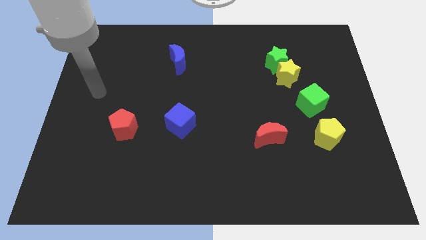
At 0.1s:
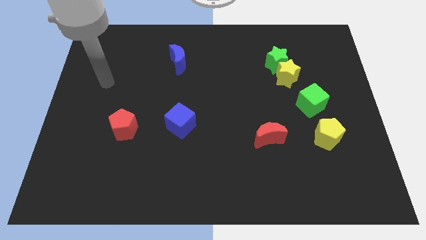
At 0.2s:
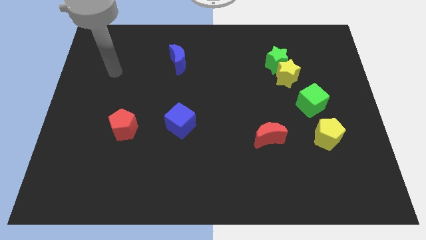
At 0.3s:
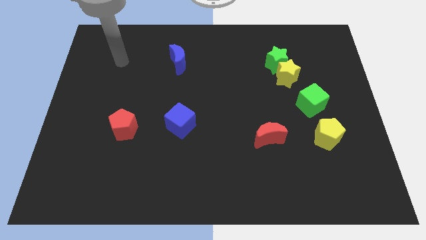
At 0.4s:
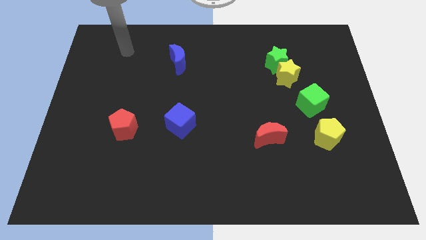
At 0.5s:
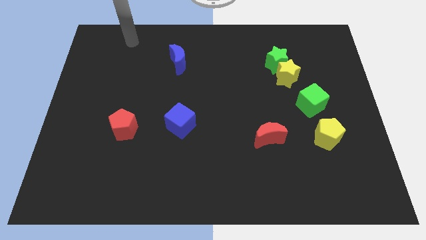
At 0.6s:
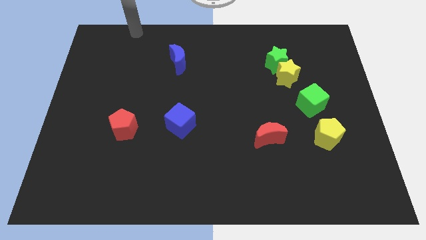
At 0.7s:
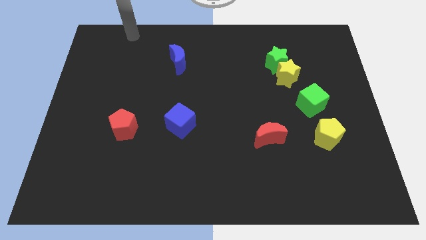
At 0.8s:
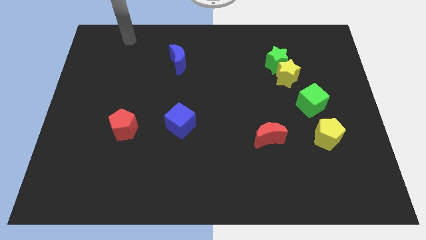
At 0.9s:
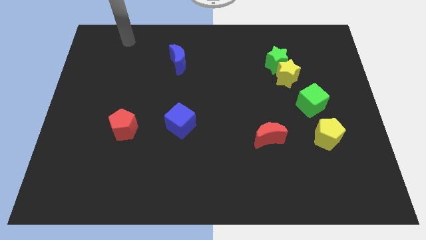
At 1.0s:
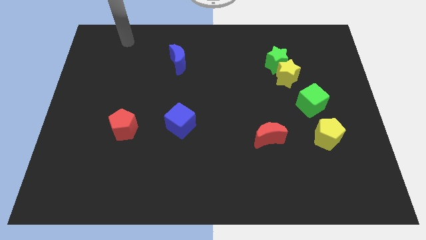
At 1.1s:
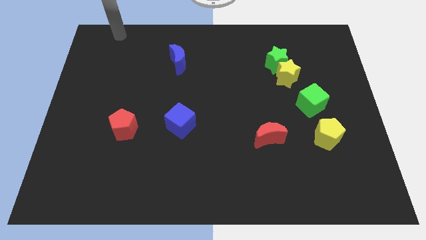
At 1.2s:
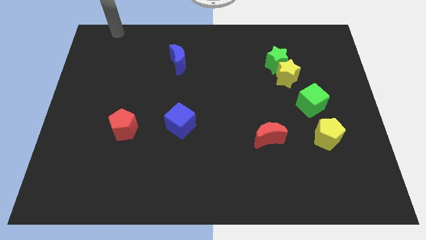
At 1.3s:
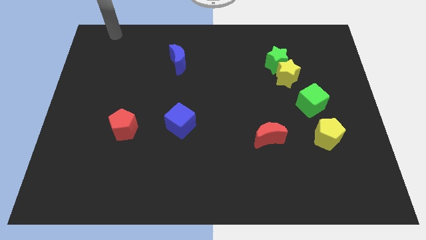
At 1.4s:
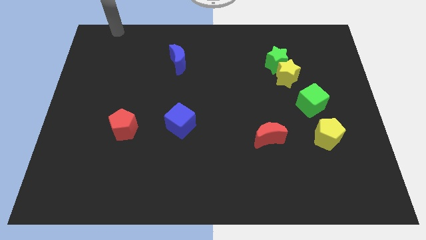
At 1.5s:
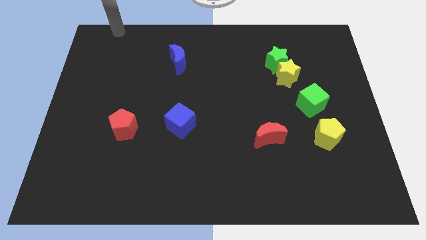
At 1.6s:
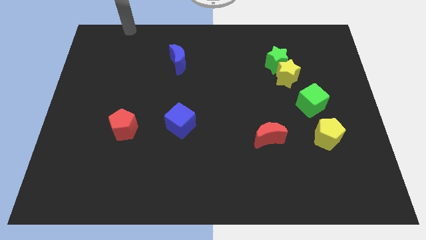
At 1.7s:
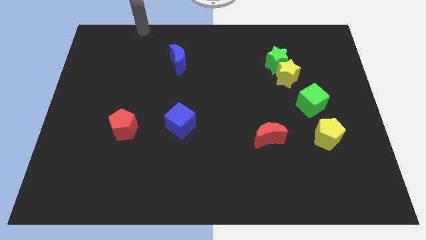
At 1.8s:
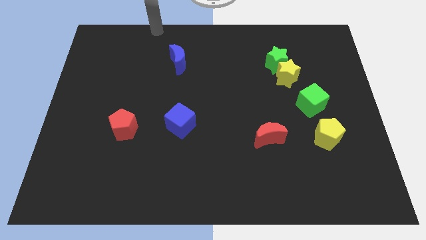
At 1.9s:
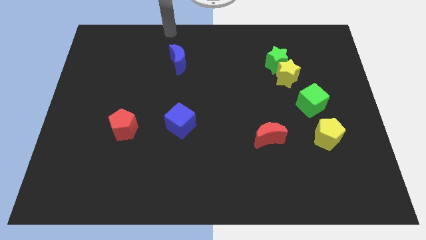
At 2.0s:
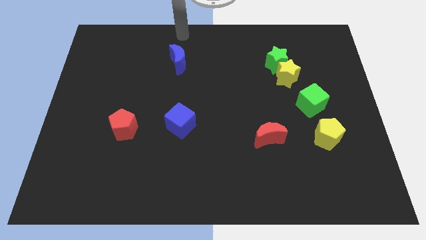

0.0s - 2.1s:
move your arm to the top side of the blue moon

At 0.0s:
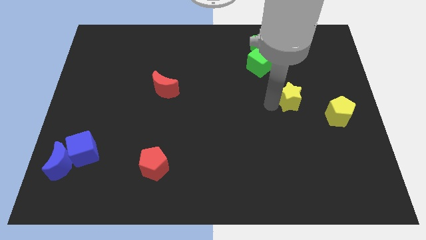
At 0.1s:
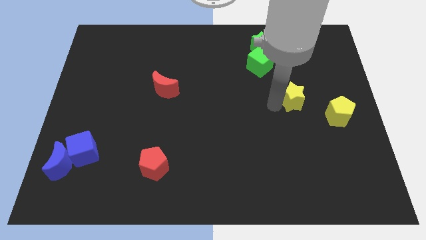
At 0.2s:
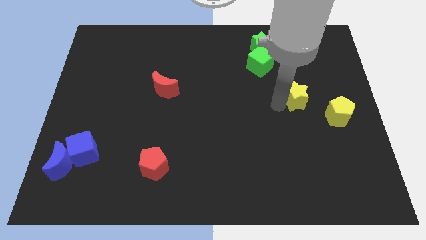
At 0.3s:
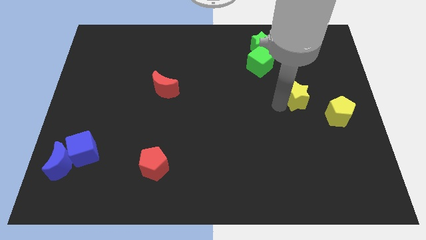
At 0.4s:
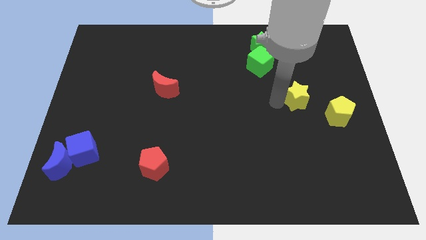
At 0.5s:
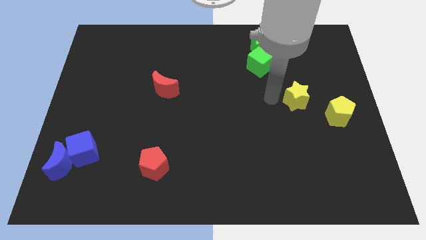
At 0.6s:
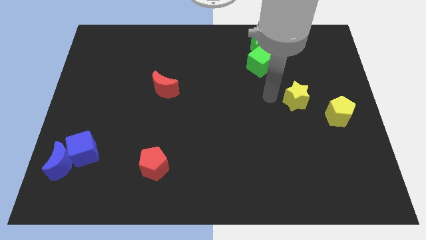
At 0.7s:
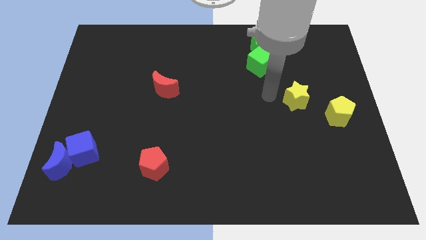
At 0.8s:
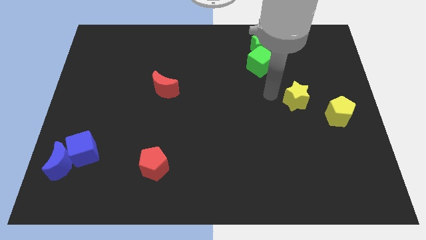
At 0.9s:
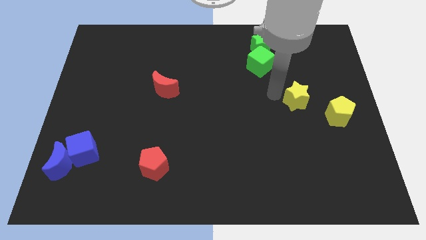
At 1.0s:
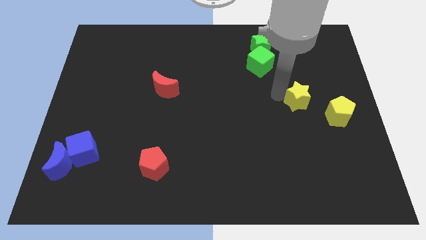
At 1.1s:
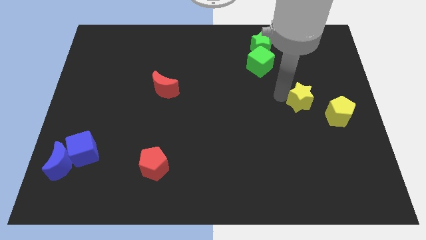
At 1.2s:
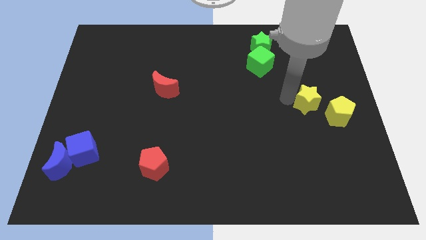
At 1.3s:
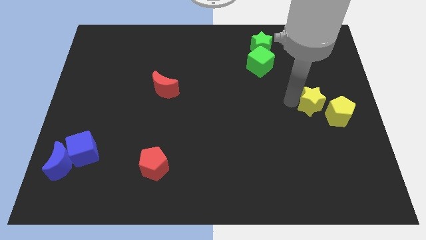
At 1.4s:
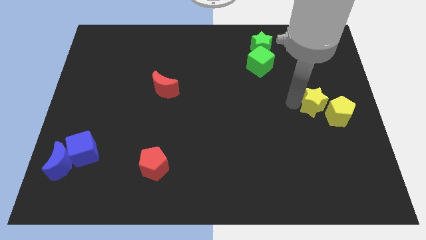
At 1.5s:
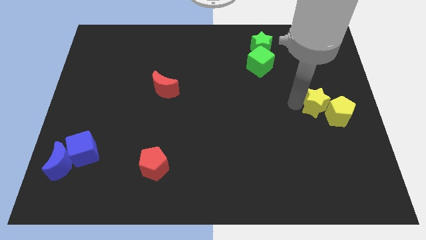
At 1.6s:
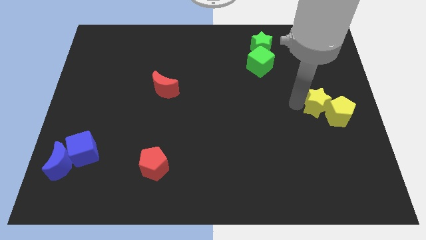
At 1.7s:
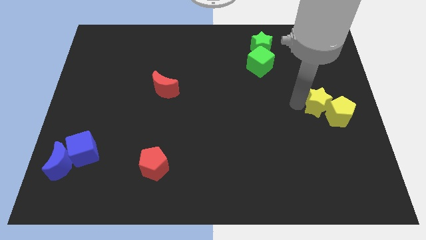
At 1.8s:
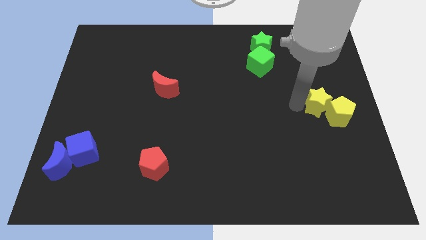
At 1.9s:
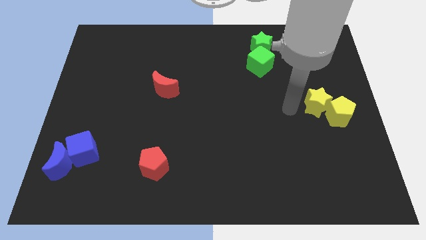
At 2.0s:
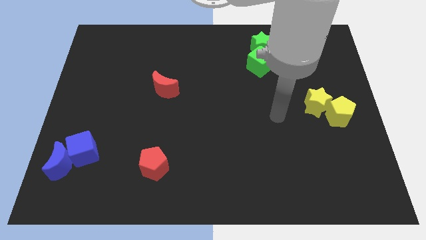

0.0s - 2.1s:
push yellow star into yellow pentagon

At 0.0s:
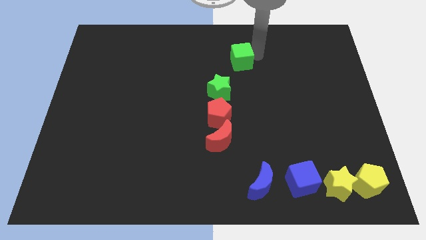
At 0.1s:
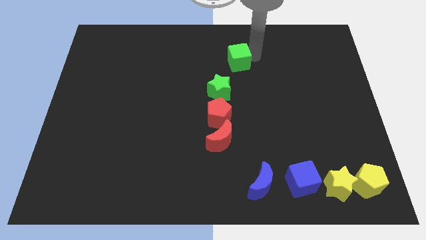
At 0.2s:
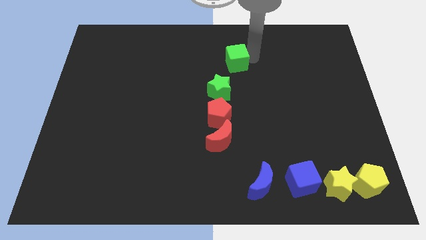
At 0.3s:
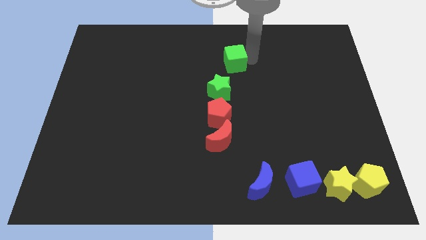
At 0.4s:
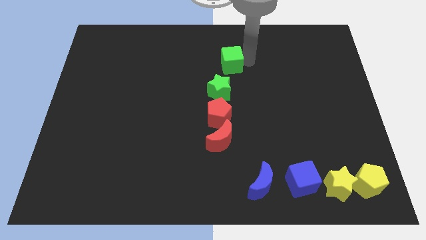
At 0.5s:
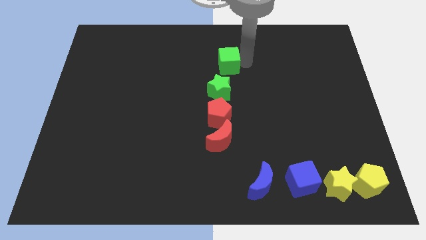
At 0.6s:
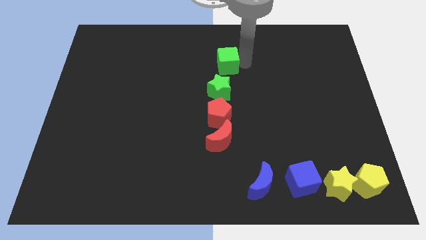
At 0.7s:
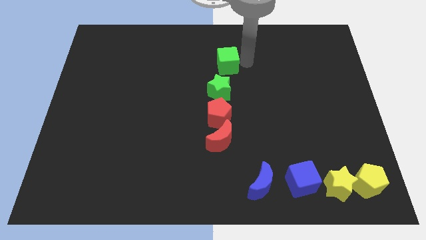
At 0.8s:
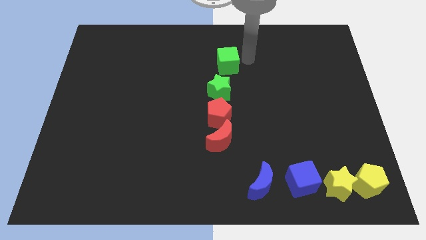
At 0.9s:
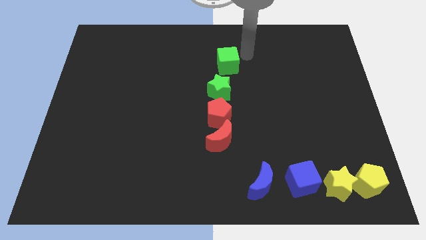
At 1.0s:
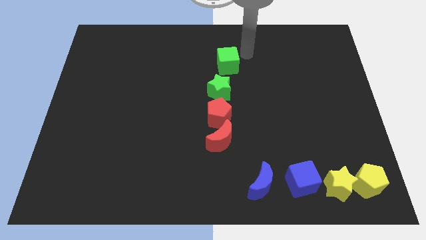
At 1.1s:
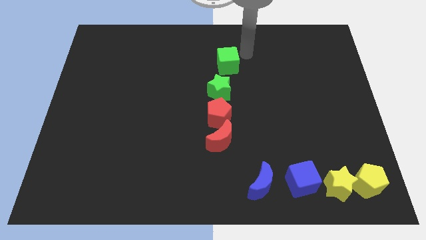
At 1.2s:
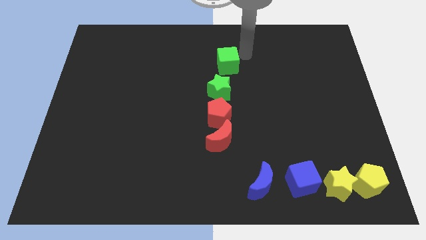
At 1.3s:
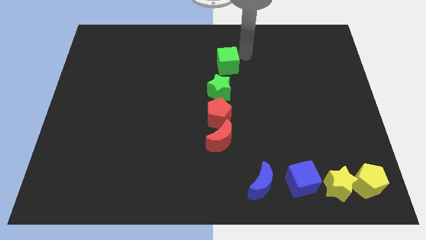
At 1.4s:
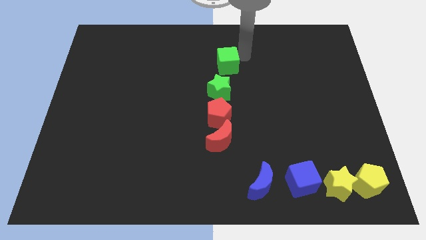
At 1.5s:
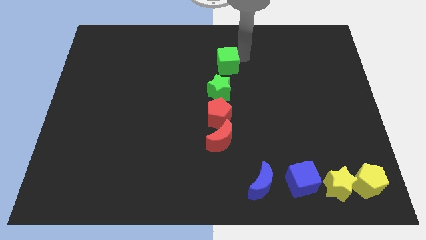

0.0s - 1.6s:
place the green cube above the green star

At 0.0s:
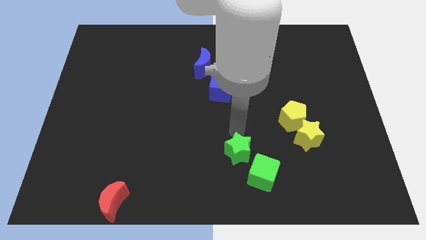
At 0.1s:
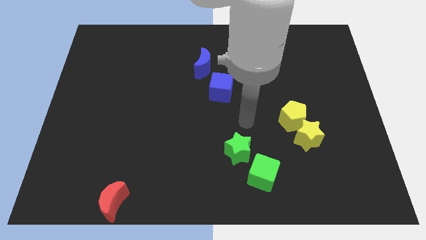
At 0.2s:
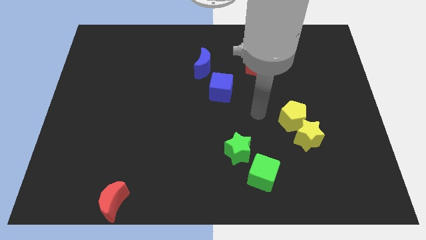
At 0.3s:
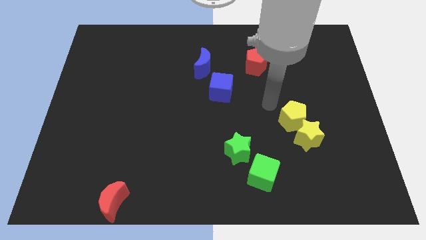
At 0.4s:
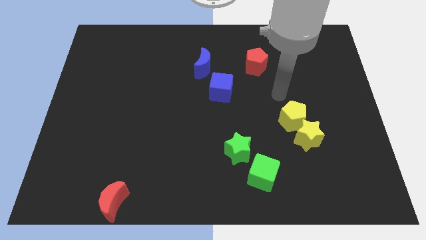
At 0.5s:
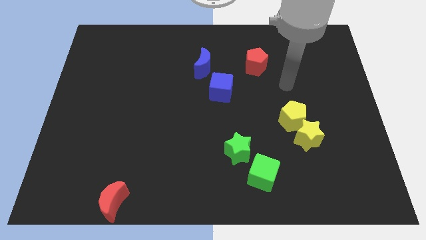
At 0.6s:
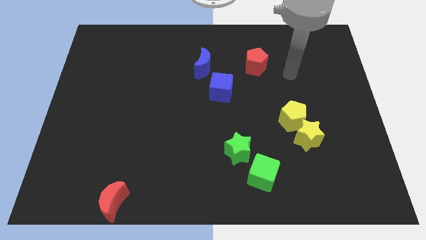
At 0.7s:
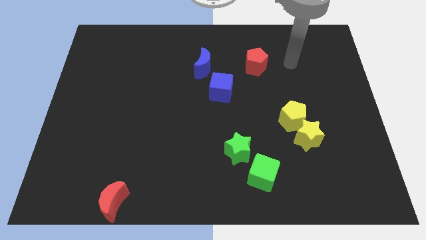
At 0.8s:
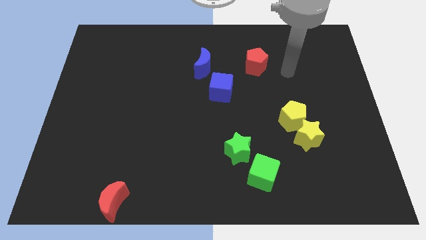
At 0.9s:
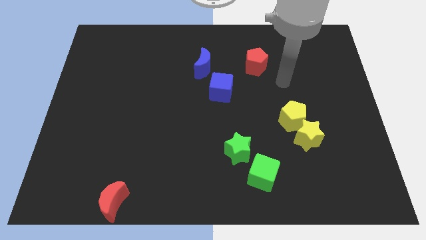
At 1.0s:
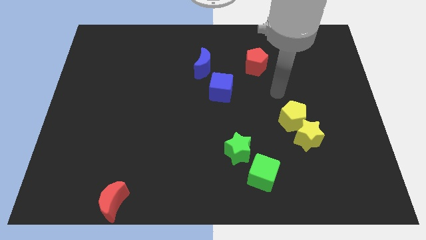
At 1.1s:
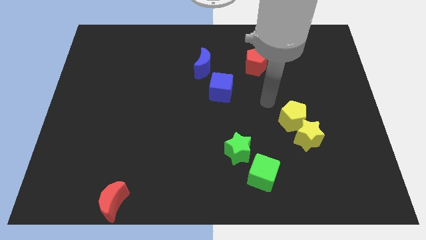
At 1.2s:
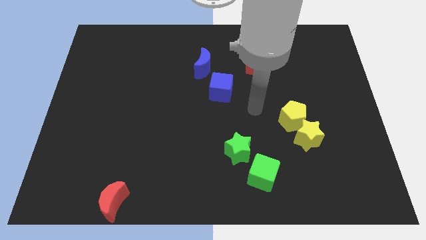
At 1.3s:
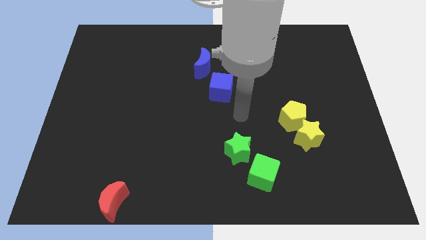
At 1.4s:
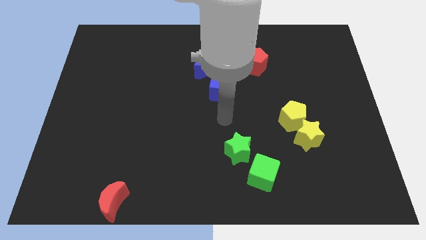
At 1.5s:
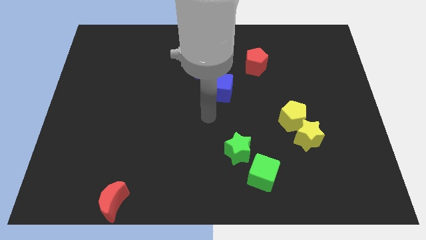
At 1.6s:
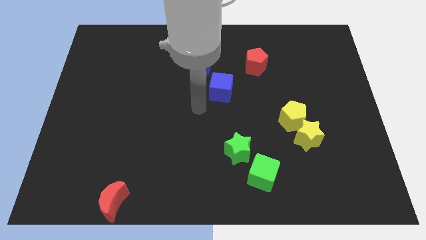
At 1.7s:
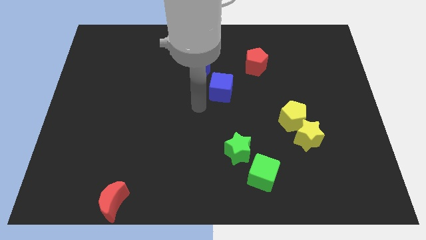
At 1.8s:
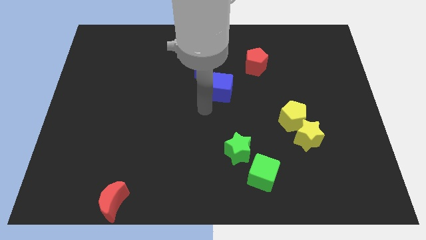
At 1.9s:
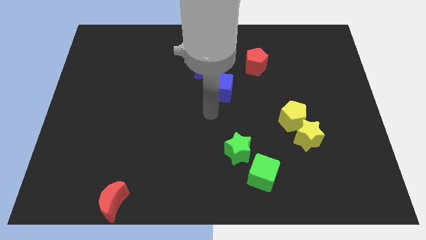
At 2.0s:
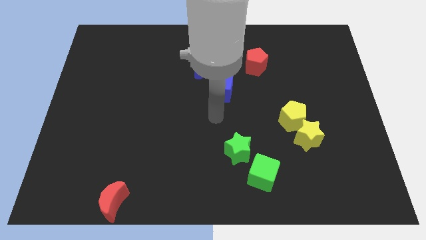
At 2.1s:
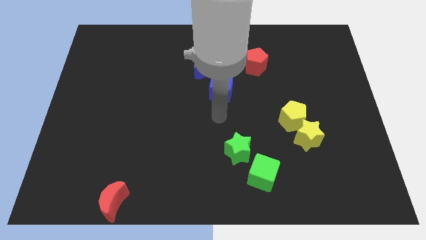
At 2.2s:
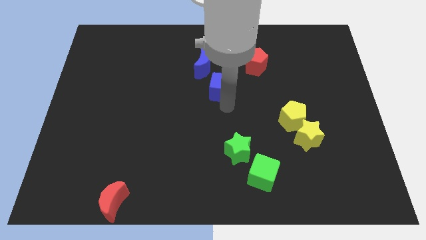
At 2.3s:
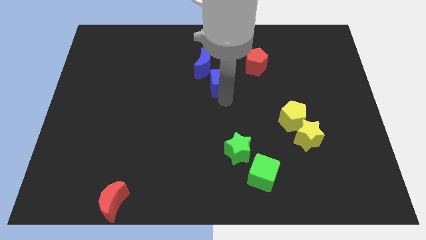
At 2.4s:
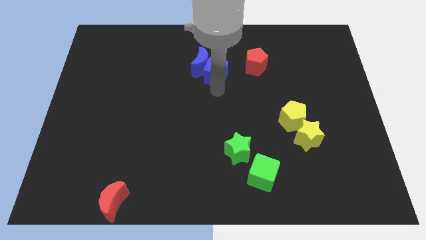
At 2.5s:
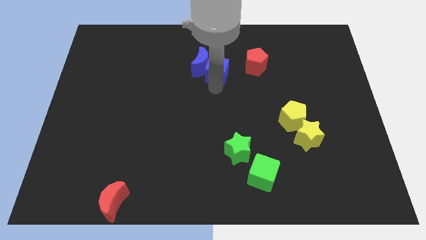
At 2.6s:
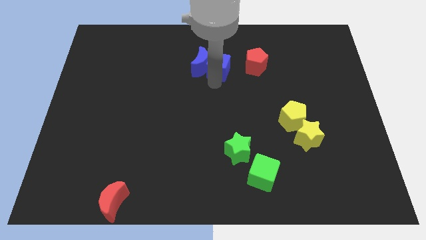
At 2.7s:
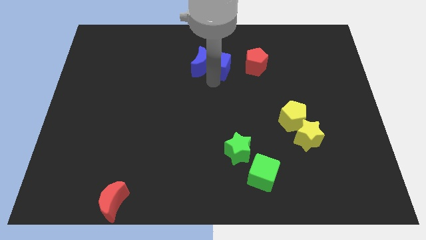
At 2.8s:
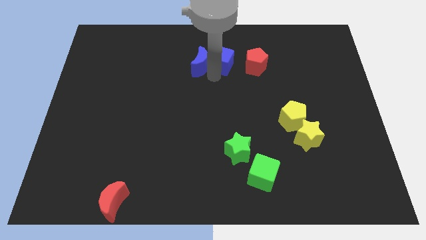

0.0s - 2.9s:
put the blue cube in between the red pentagon and blue moon

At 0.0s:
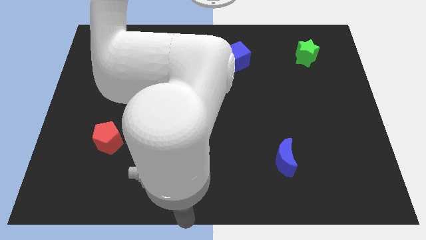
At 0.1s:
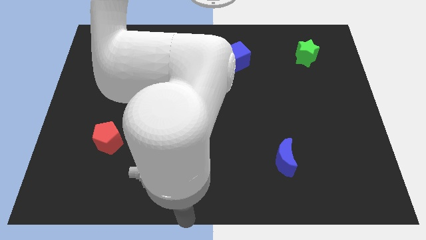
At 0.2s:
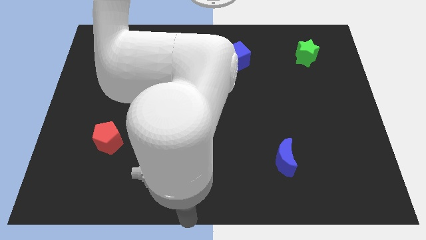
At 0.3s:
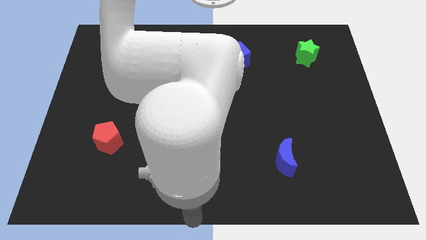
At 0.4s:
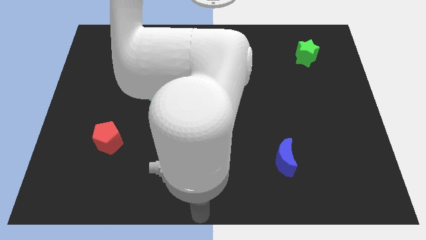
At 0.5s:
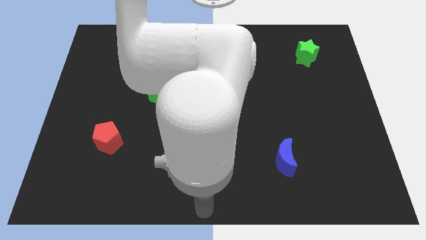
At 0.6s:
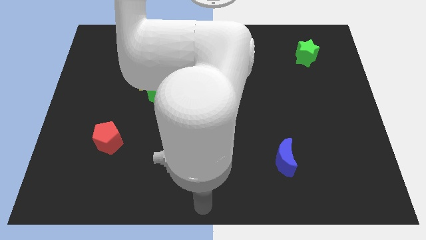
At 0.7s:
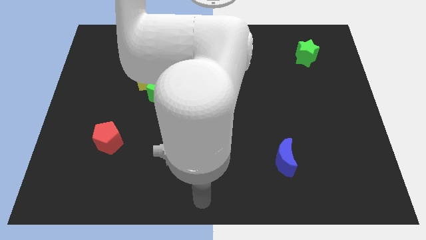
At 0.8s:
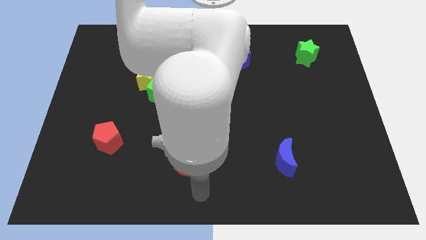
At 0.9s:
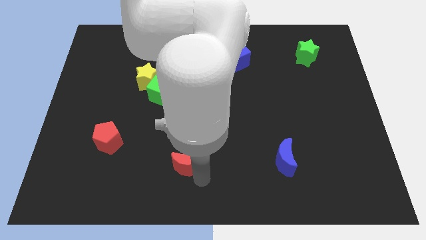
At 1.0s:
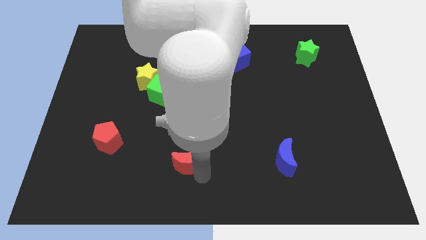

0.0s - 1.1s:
point your arm at the bottom of red moon
